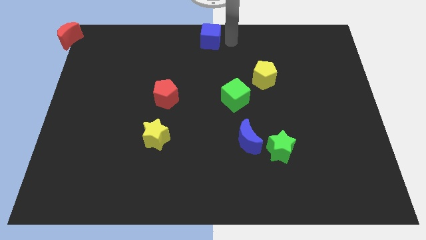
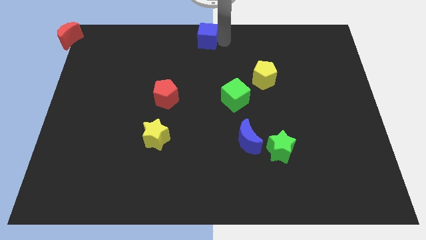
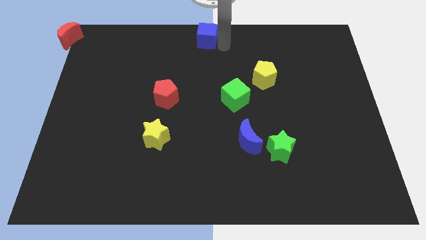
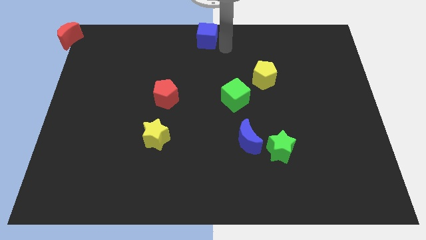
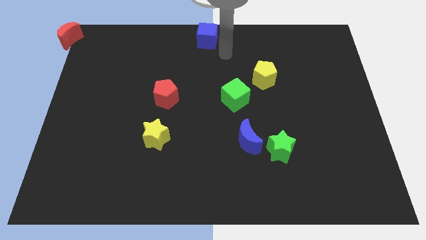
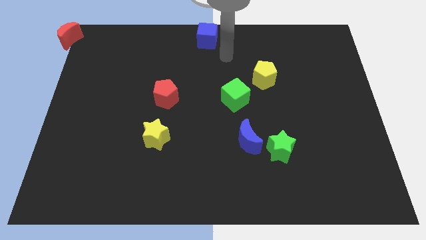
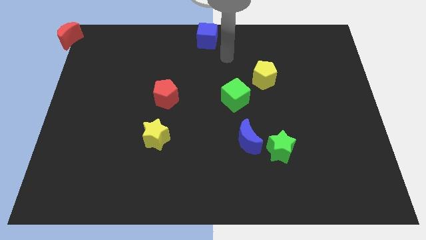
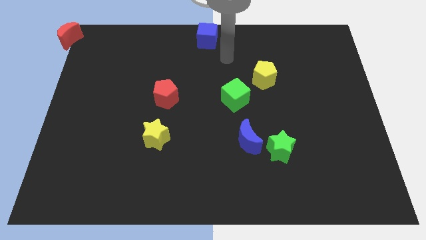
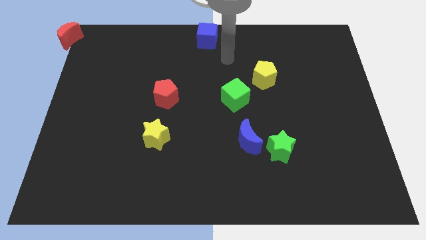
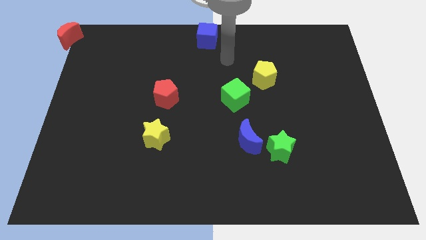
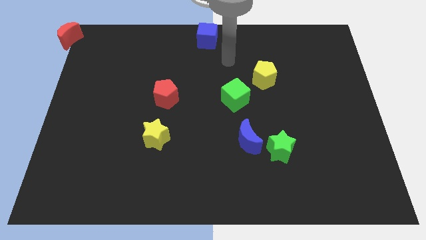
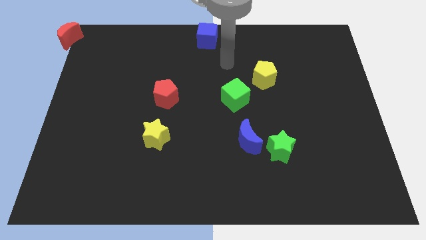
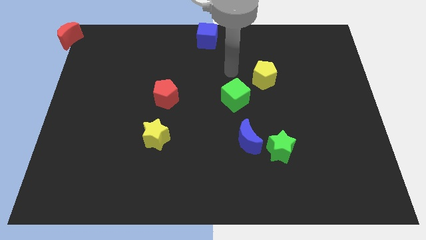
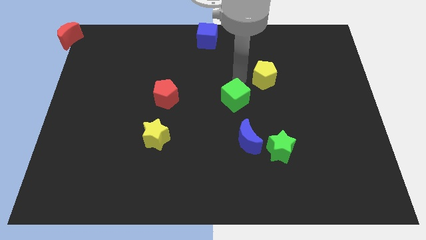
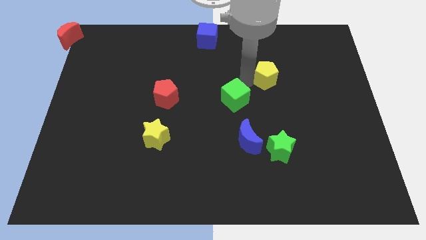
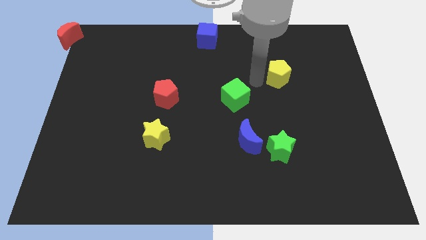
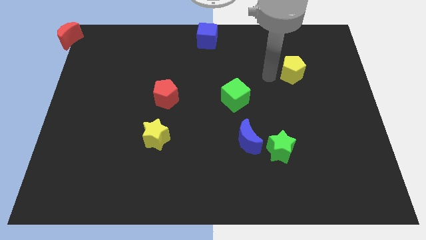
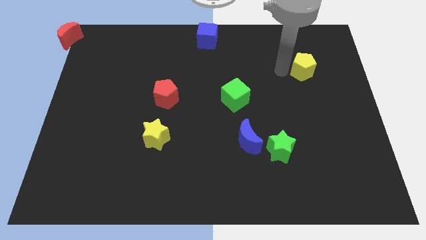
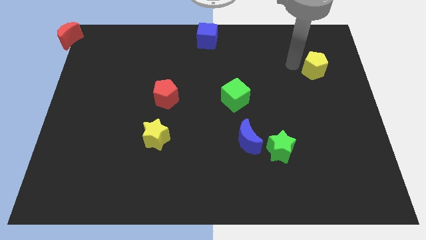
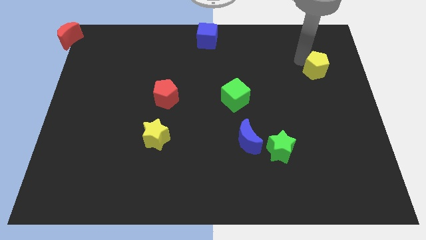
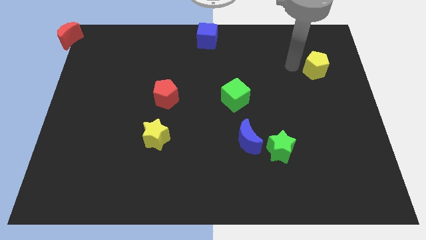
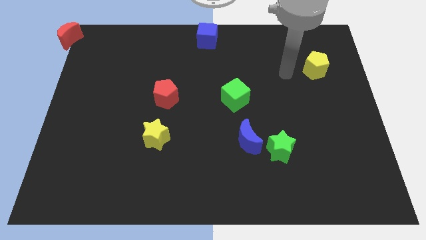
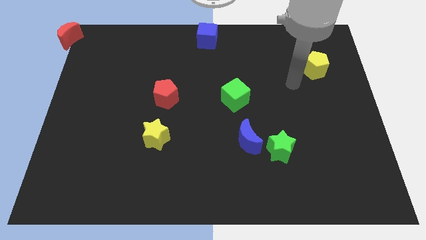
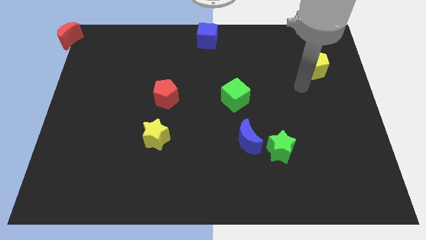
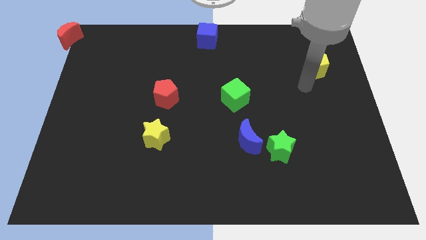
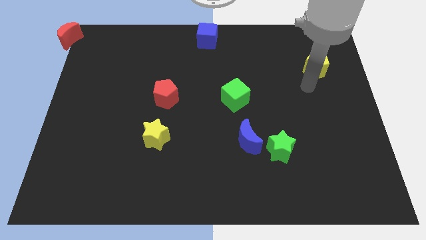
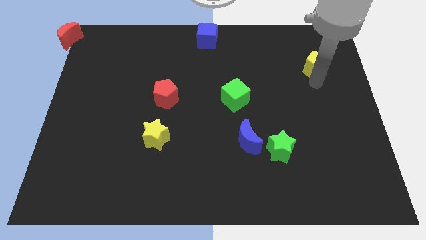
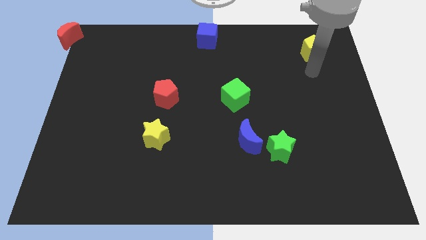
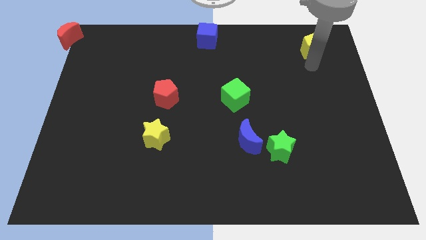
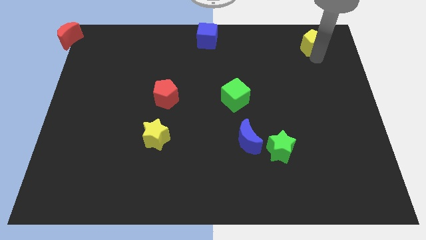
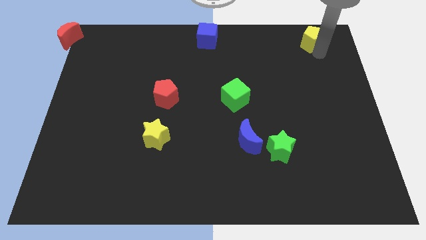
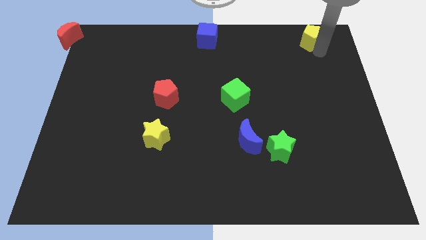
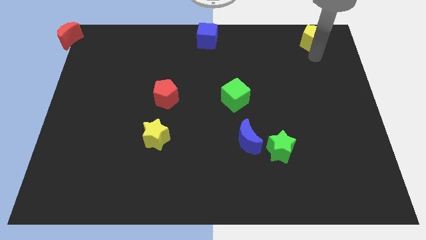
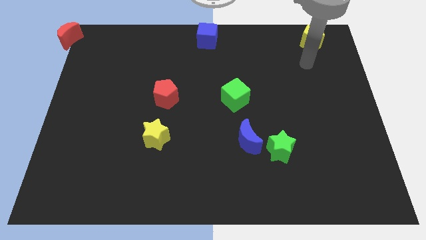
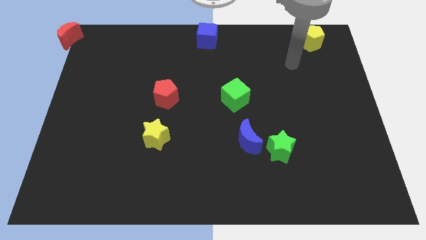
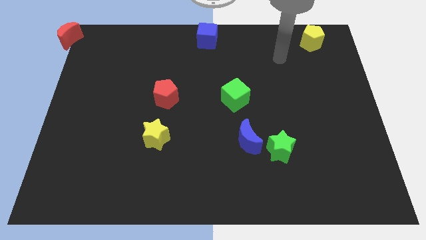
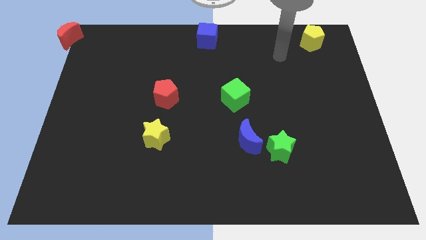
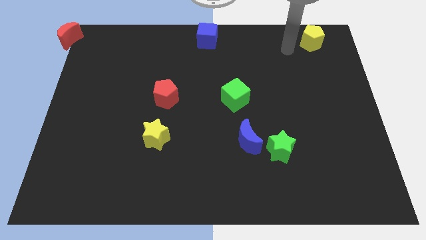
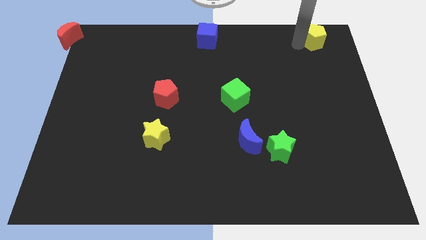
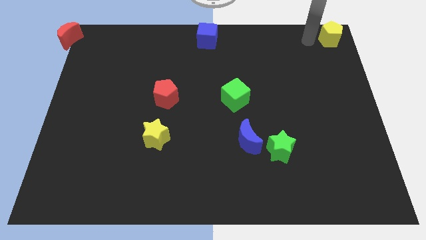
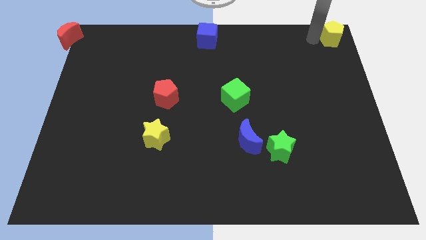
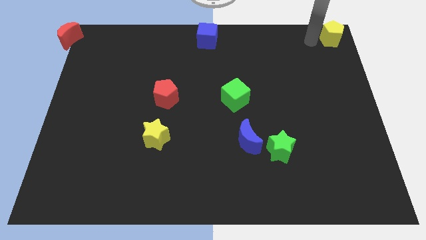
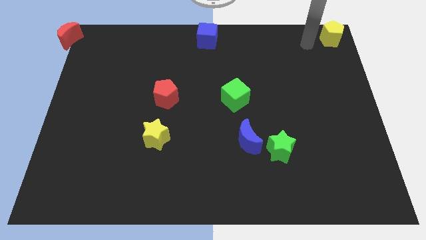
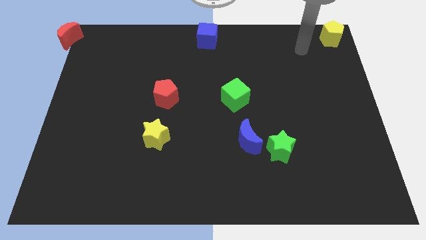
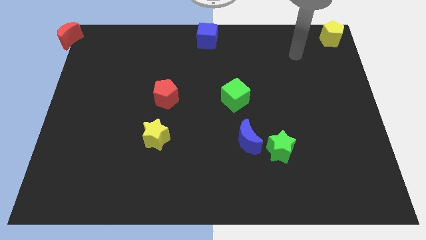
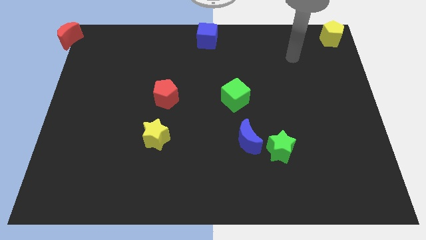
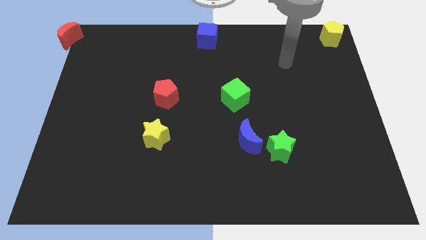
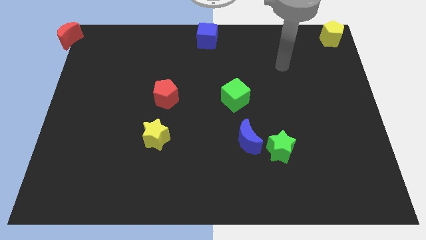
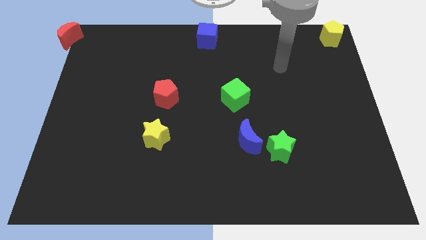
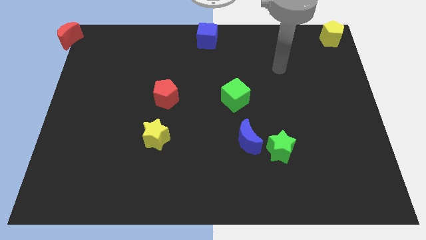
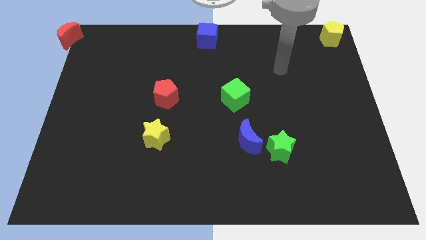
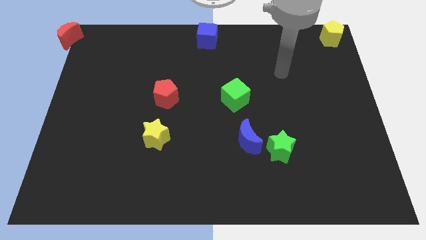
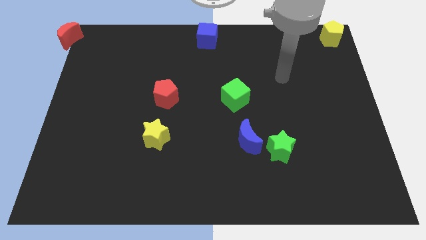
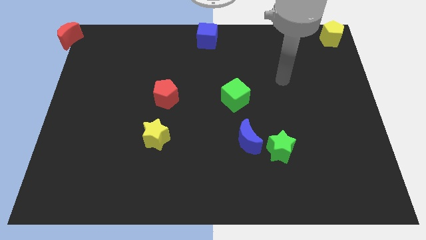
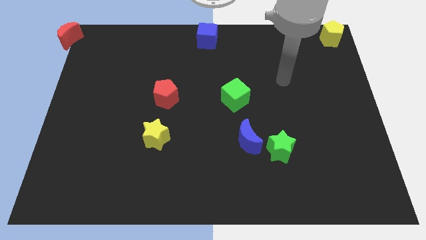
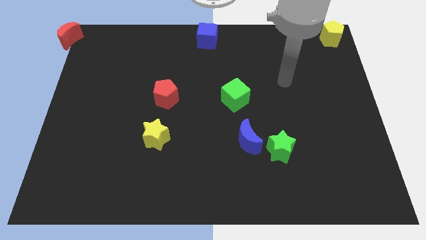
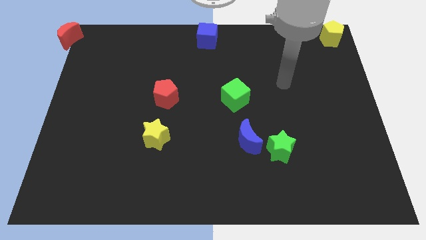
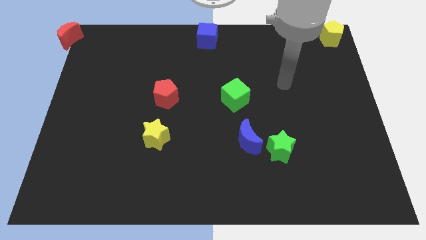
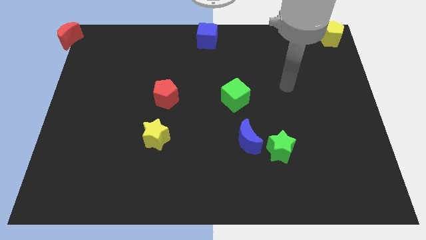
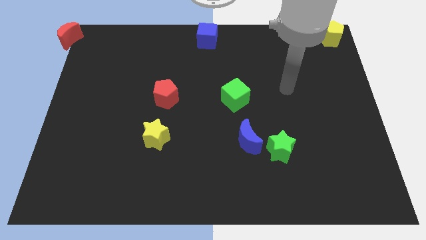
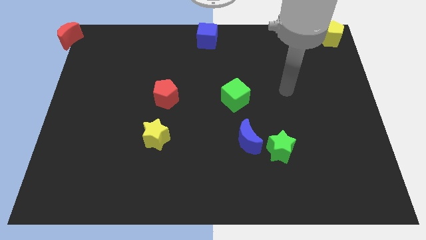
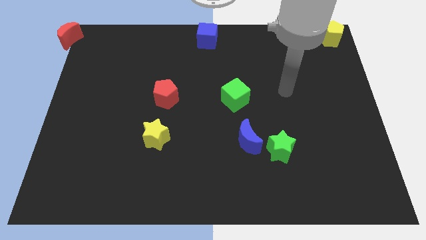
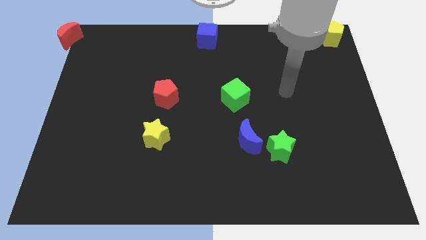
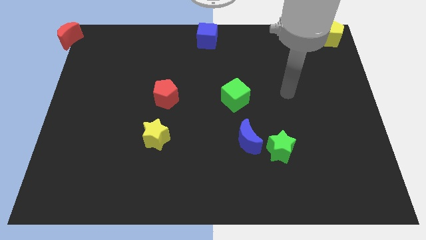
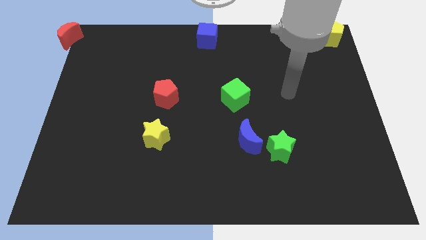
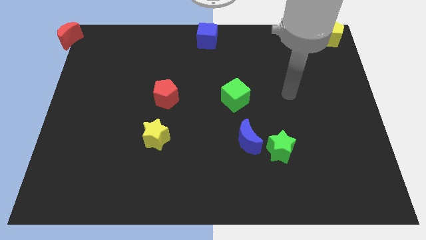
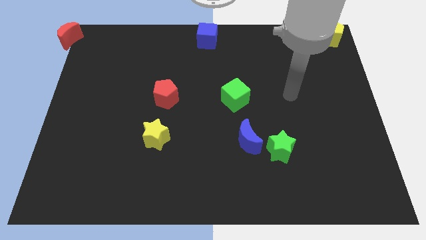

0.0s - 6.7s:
slide the yellow pentagon to the top right corner

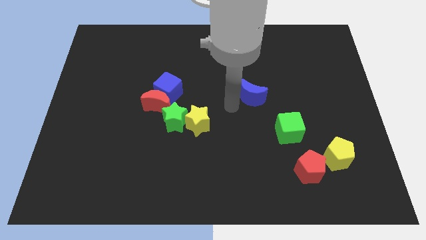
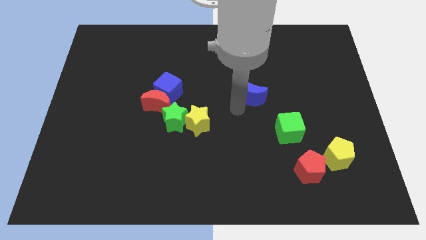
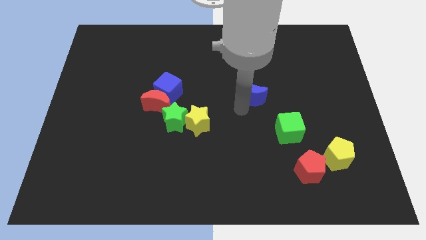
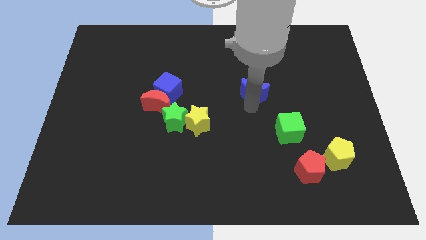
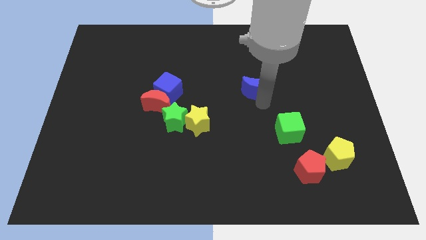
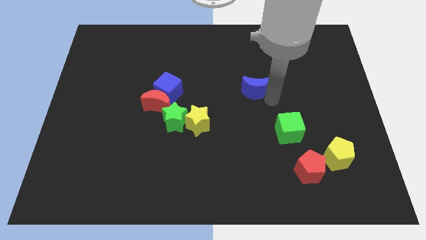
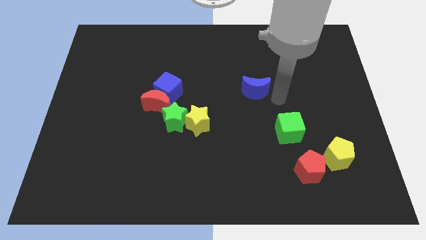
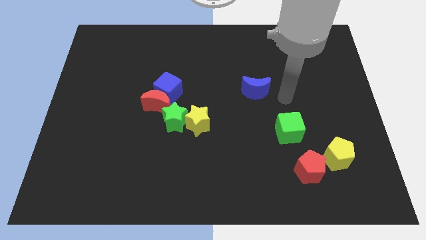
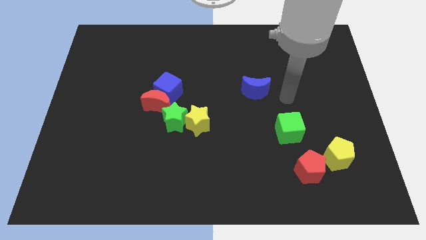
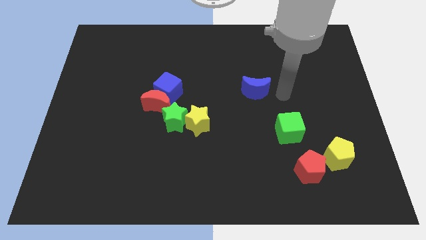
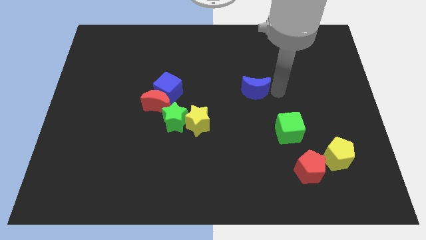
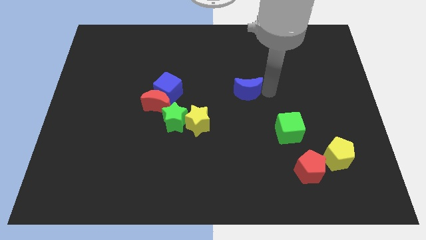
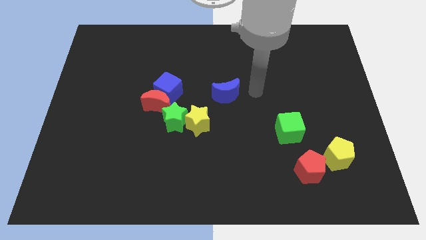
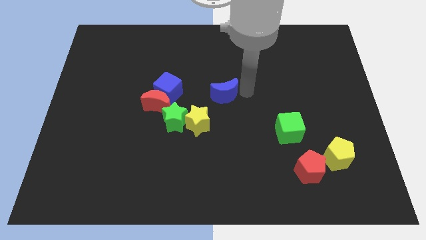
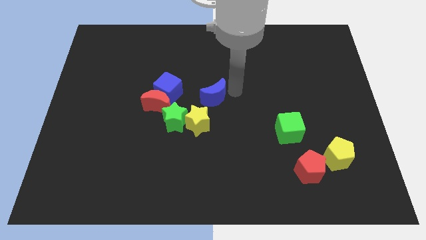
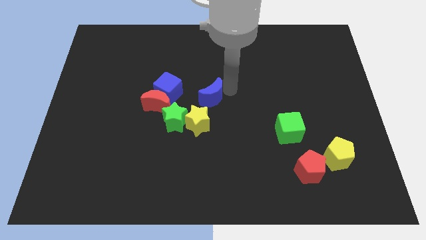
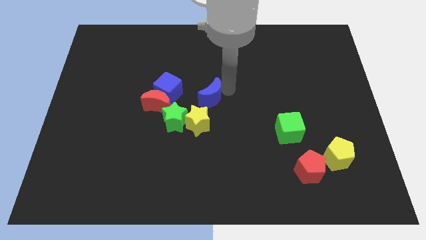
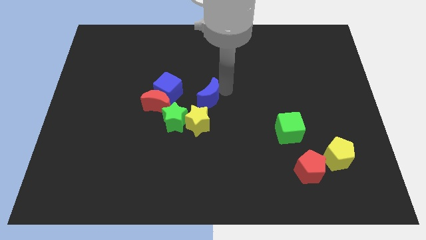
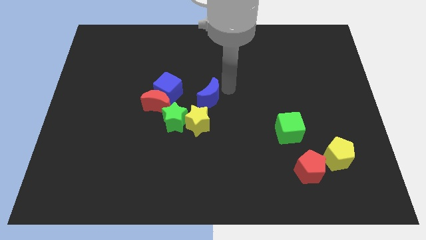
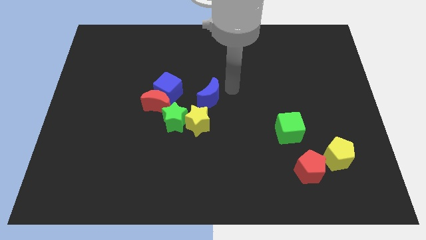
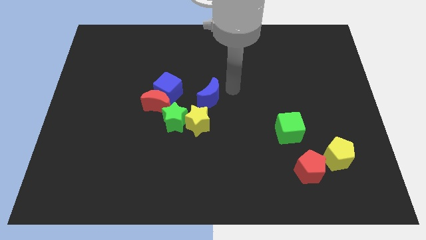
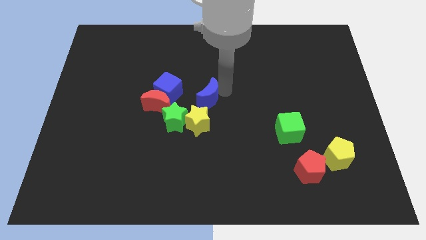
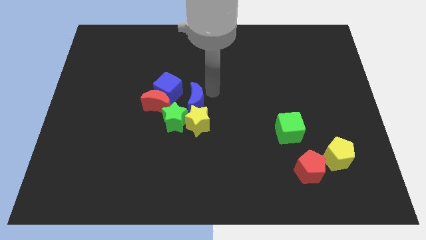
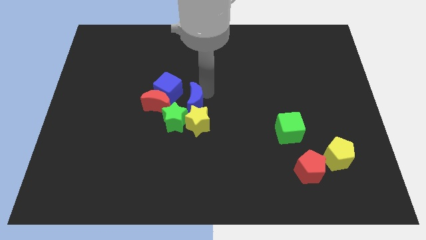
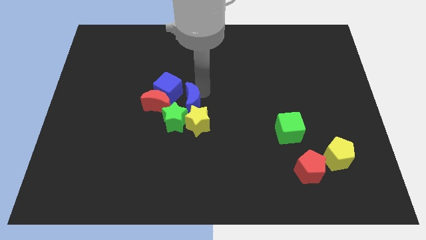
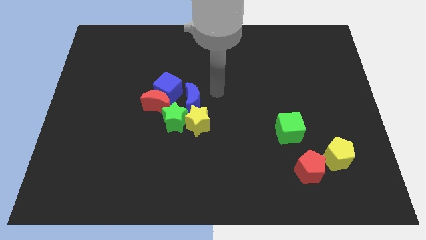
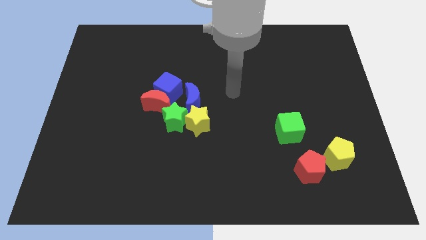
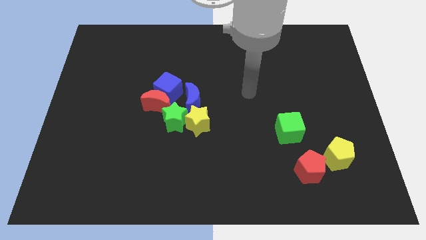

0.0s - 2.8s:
move the blue crescent to the top of the group of stars
